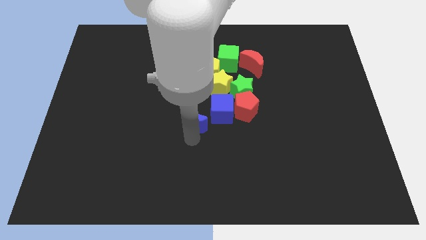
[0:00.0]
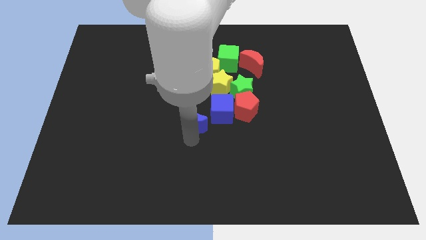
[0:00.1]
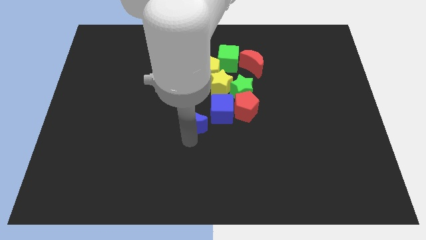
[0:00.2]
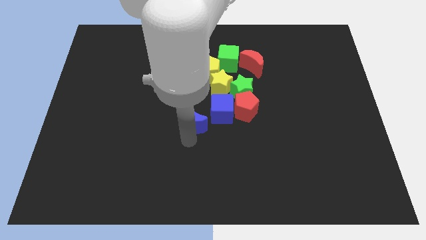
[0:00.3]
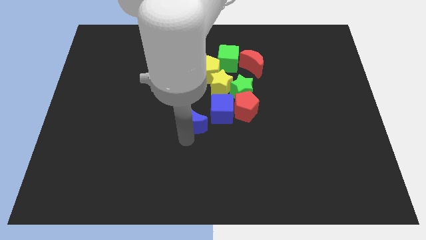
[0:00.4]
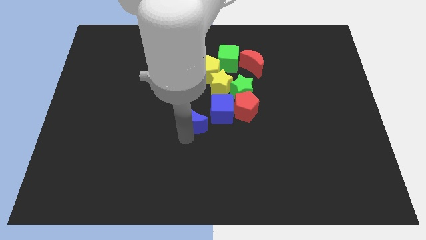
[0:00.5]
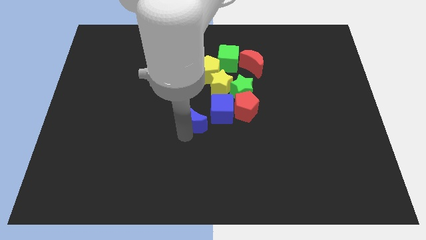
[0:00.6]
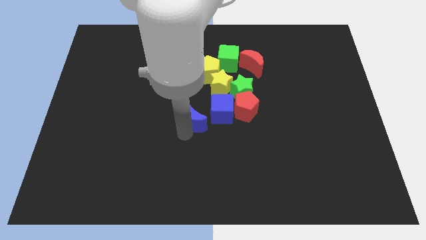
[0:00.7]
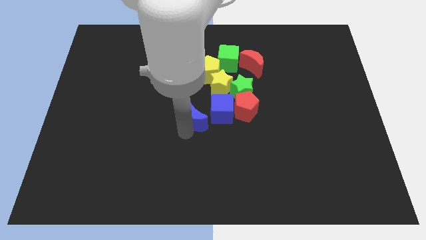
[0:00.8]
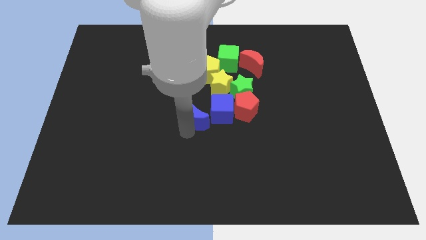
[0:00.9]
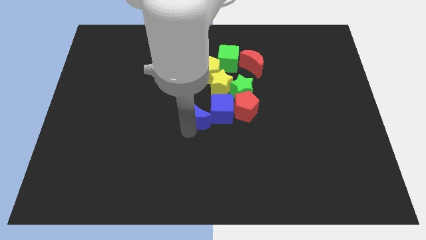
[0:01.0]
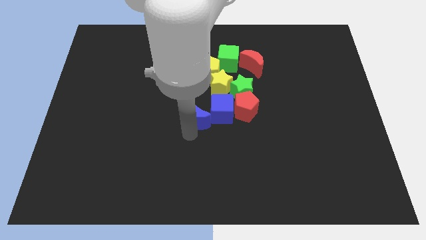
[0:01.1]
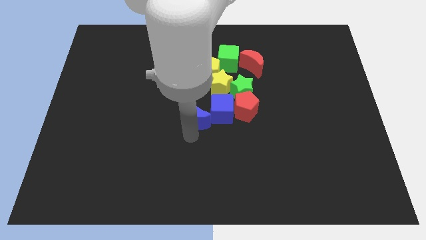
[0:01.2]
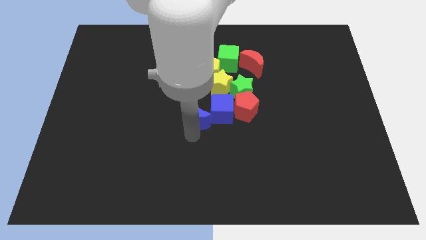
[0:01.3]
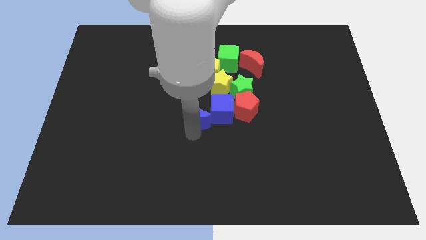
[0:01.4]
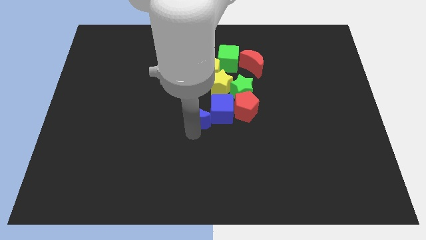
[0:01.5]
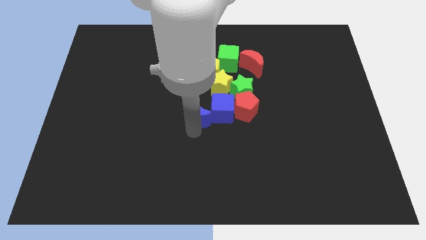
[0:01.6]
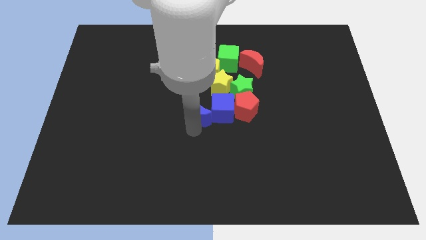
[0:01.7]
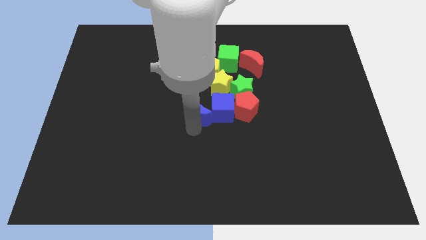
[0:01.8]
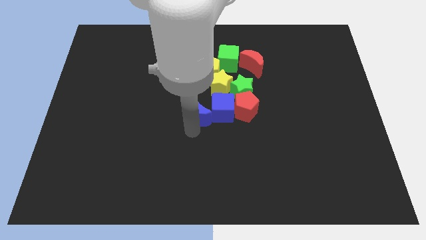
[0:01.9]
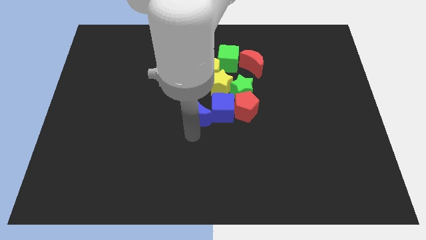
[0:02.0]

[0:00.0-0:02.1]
place blue crescent left to blue cube

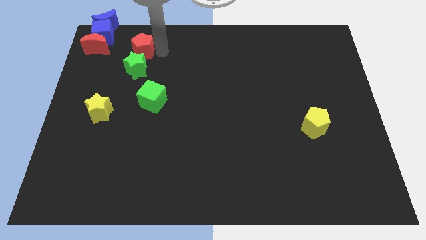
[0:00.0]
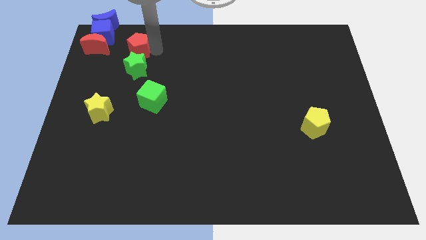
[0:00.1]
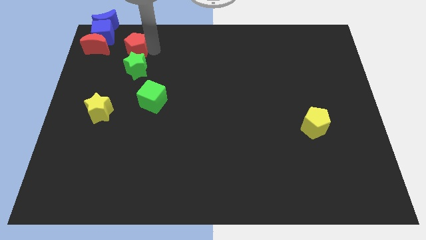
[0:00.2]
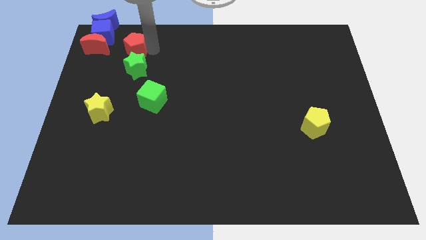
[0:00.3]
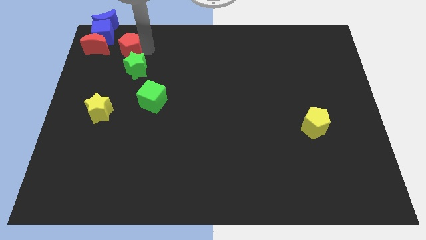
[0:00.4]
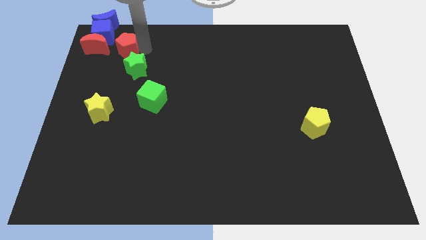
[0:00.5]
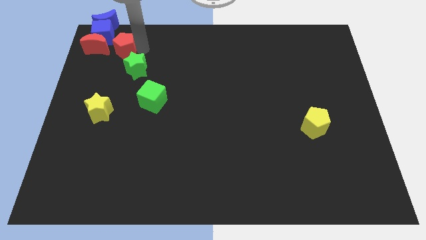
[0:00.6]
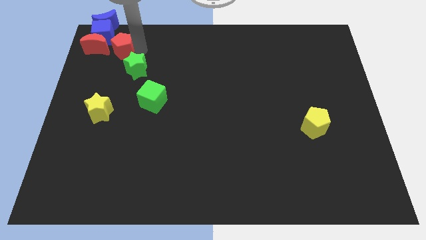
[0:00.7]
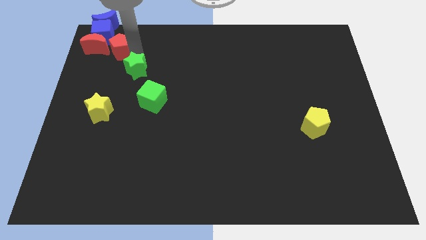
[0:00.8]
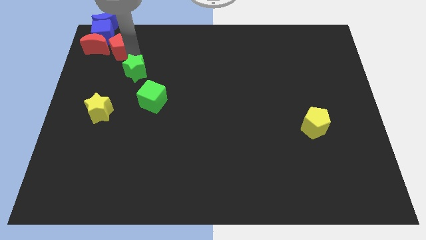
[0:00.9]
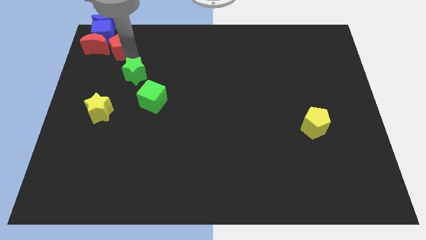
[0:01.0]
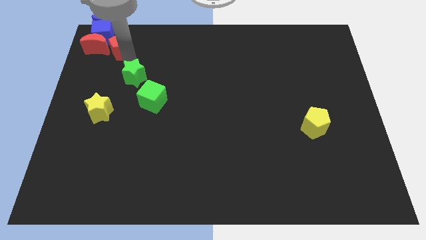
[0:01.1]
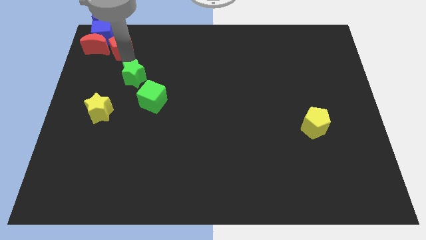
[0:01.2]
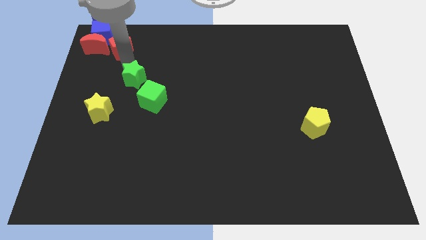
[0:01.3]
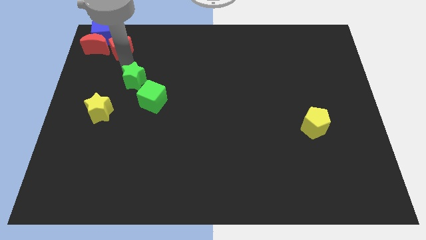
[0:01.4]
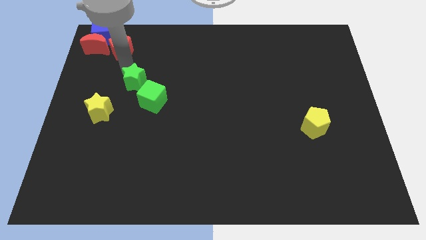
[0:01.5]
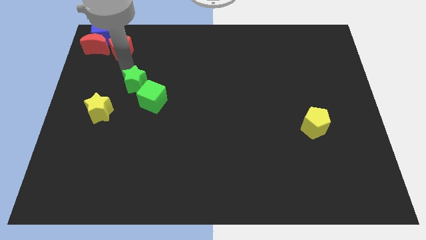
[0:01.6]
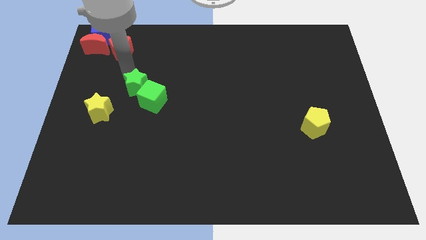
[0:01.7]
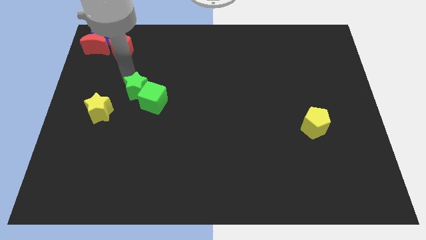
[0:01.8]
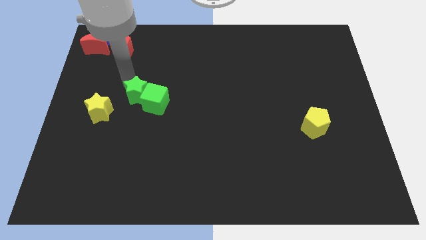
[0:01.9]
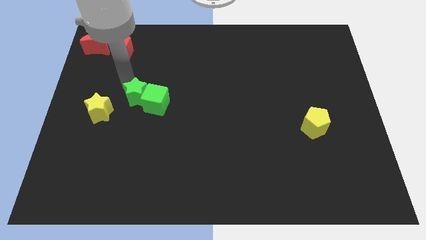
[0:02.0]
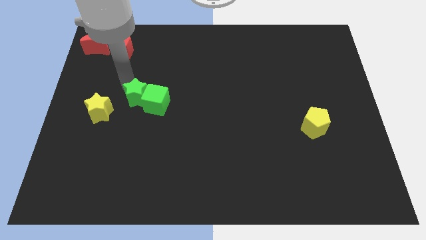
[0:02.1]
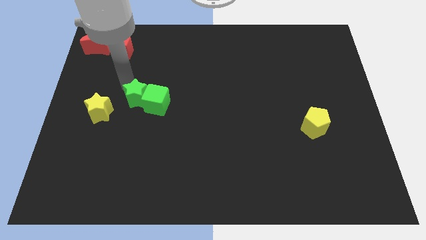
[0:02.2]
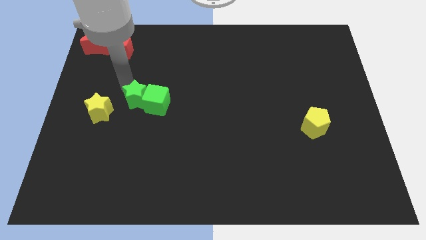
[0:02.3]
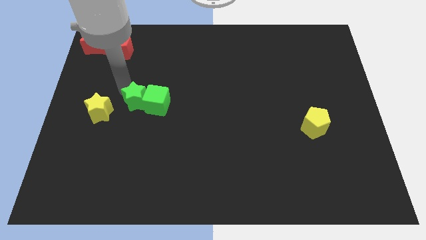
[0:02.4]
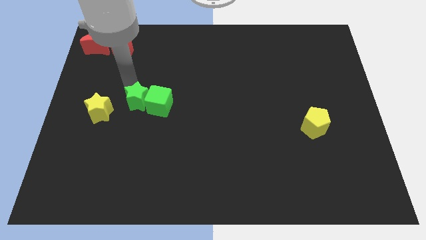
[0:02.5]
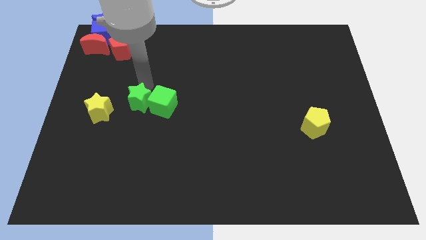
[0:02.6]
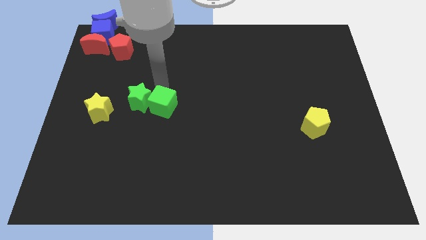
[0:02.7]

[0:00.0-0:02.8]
place green star beside green cube

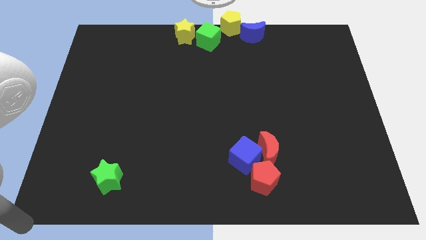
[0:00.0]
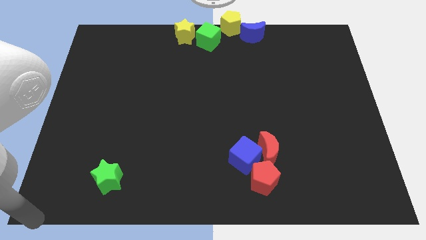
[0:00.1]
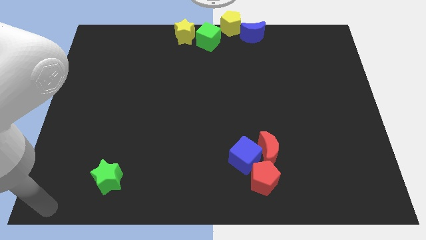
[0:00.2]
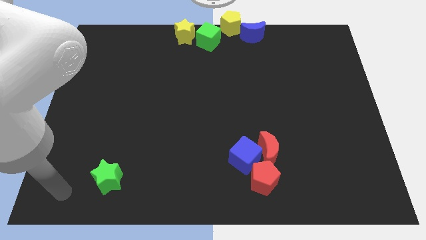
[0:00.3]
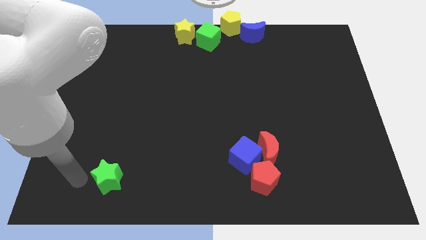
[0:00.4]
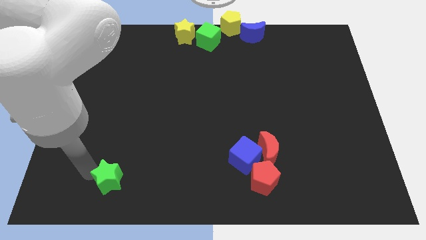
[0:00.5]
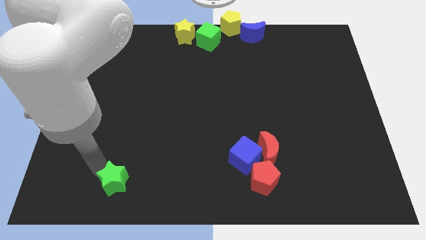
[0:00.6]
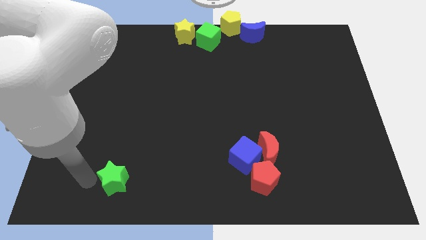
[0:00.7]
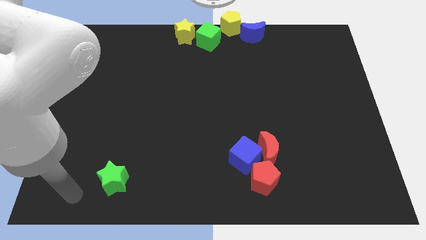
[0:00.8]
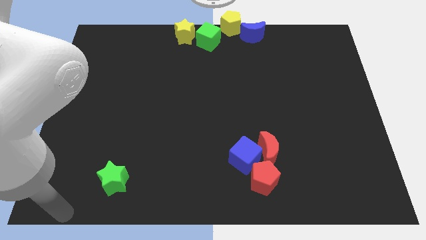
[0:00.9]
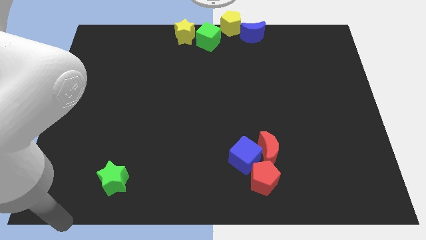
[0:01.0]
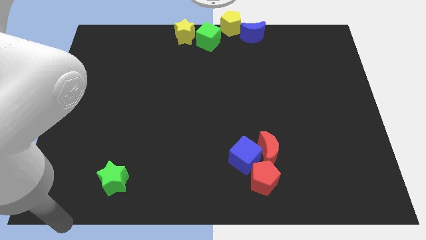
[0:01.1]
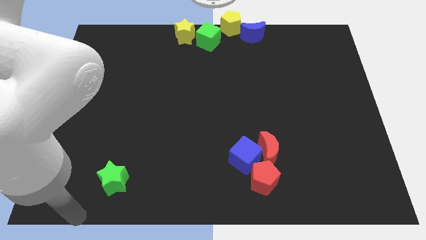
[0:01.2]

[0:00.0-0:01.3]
slightly push the green star on the board

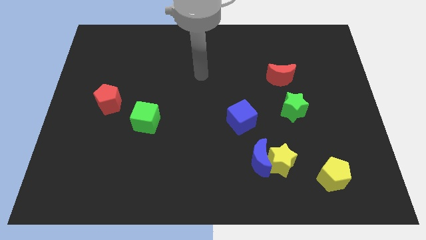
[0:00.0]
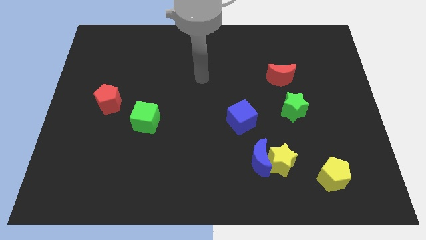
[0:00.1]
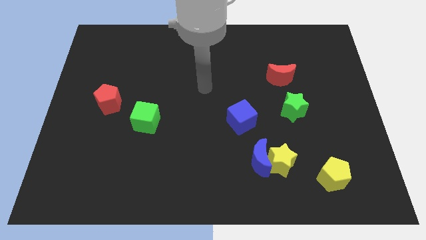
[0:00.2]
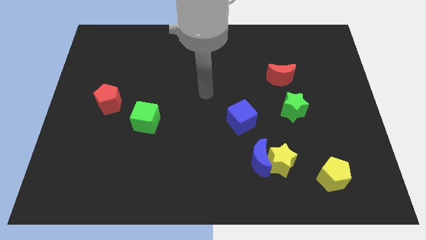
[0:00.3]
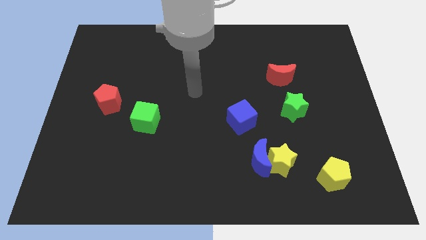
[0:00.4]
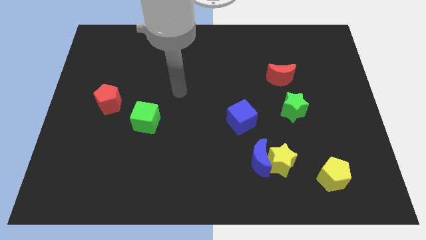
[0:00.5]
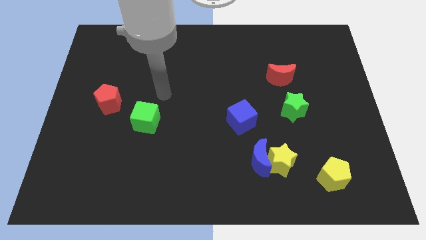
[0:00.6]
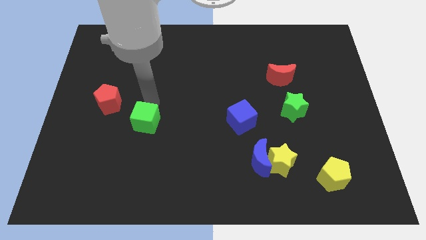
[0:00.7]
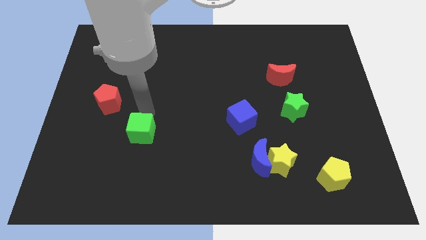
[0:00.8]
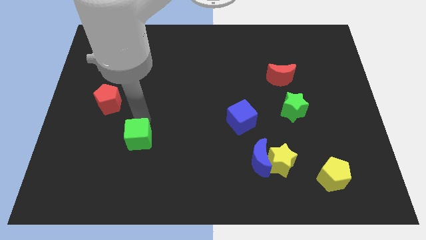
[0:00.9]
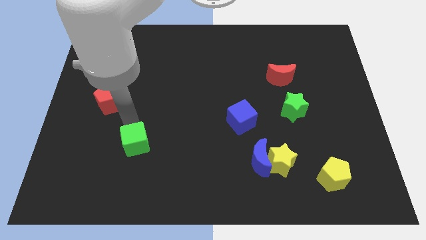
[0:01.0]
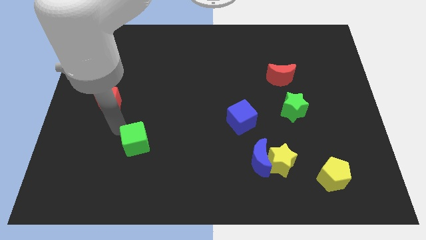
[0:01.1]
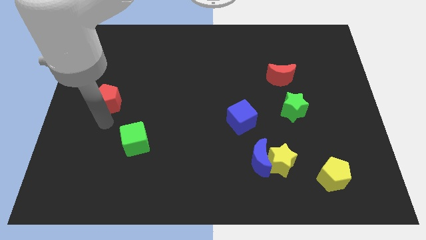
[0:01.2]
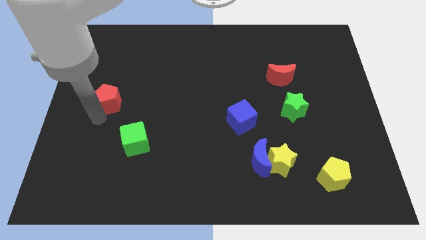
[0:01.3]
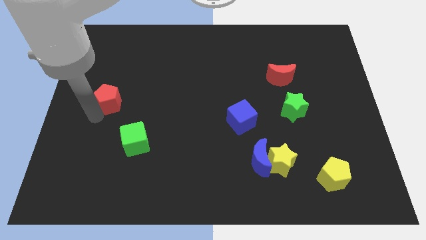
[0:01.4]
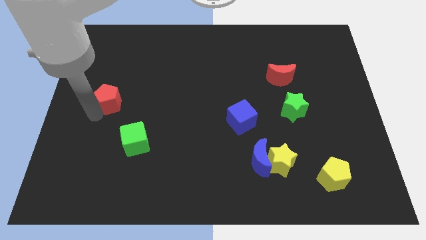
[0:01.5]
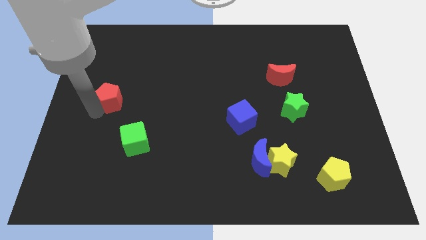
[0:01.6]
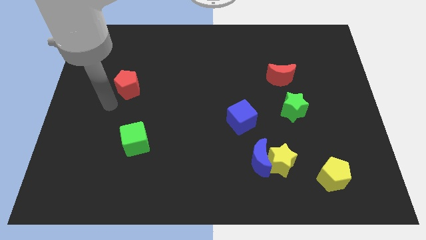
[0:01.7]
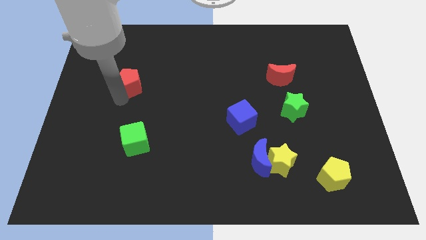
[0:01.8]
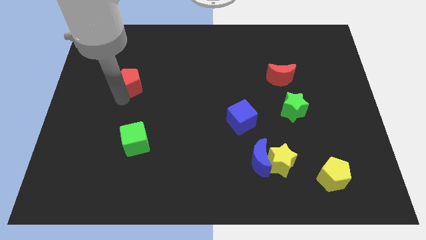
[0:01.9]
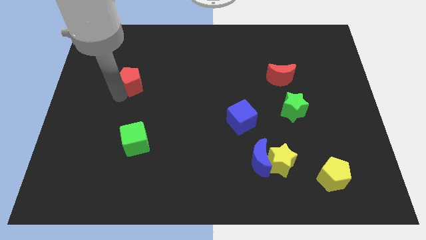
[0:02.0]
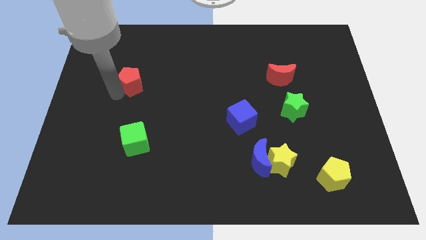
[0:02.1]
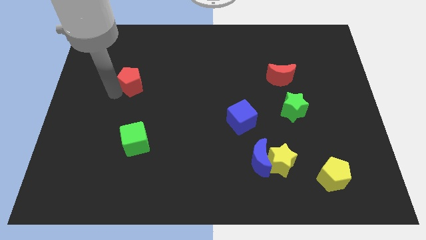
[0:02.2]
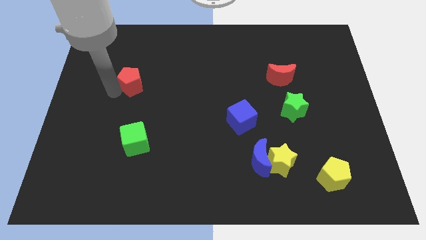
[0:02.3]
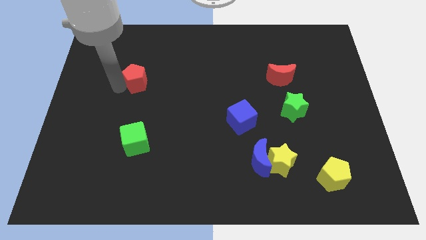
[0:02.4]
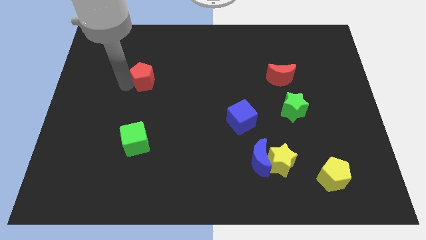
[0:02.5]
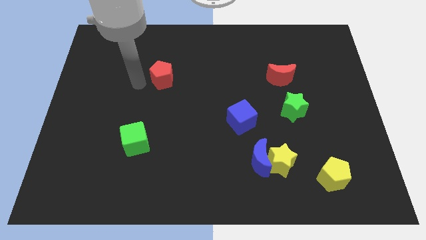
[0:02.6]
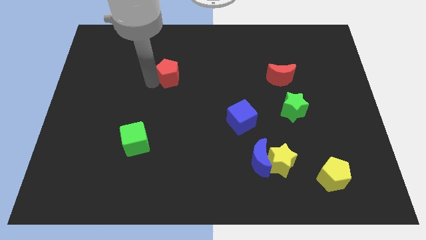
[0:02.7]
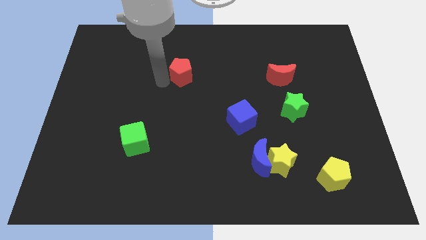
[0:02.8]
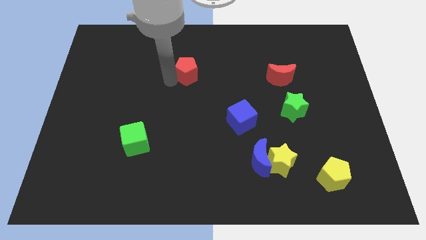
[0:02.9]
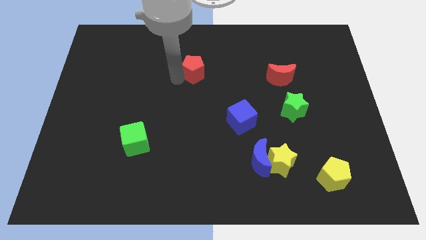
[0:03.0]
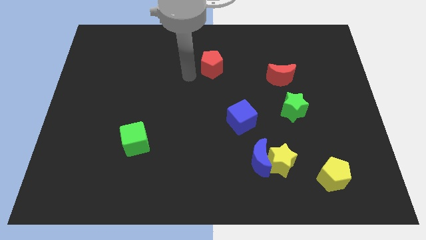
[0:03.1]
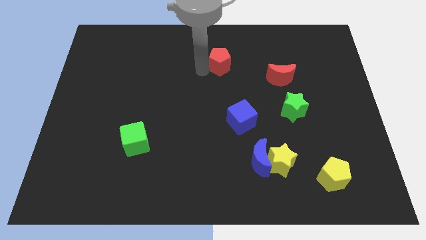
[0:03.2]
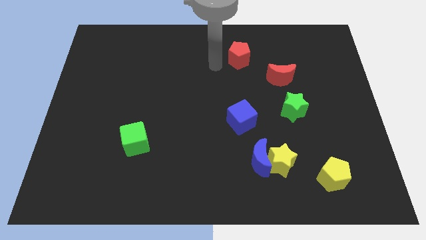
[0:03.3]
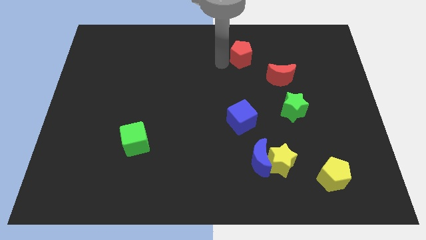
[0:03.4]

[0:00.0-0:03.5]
push the green cube and red pentagon diagonal to each other
